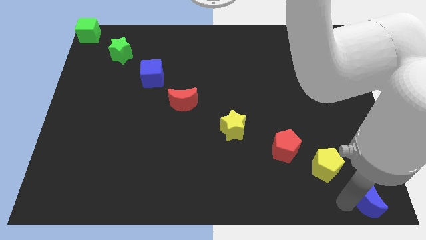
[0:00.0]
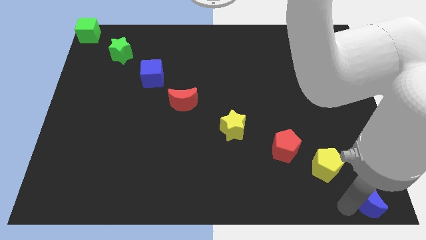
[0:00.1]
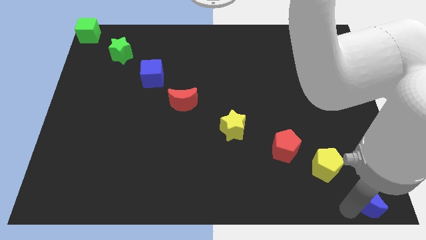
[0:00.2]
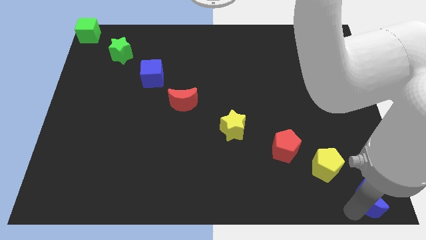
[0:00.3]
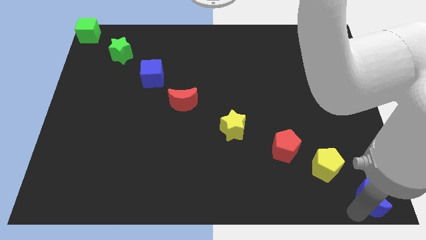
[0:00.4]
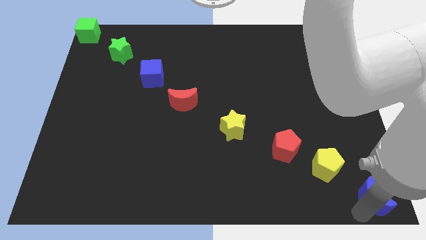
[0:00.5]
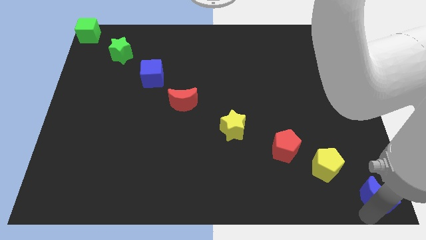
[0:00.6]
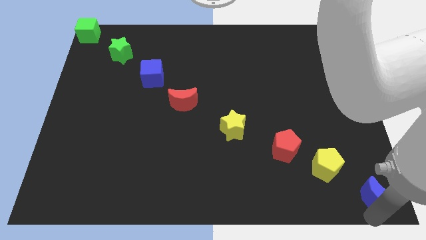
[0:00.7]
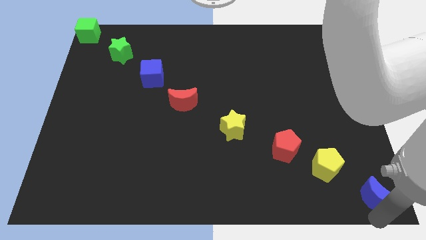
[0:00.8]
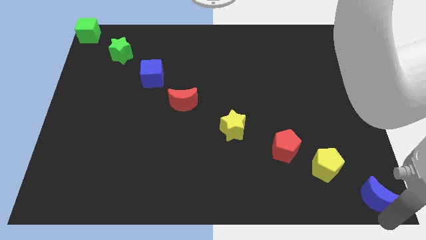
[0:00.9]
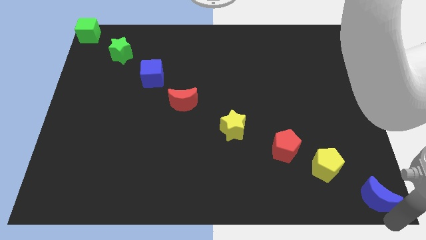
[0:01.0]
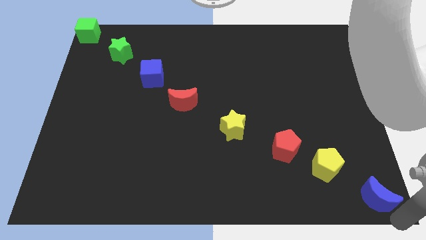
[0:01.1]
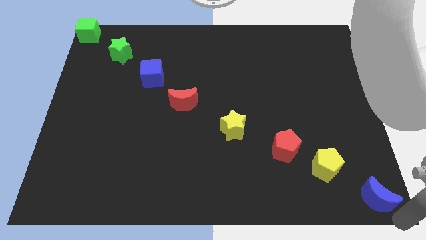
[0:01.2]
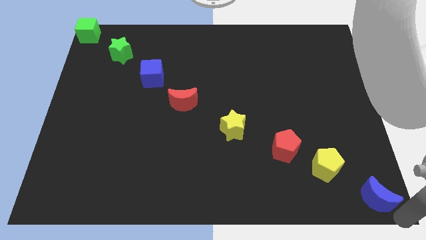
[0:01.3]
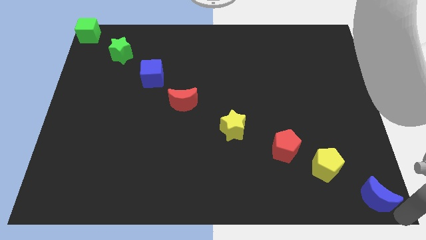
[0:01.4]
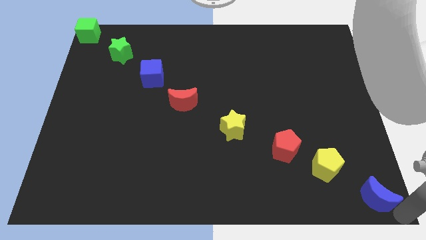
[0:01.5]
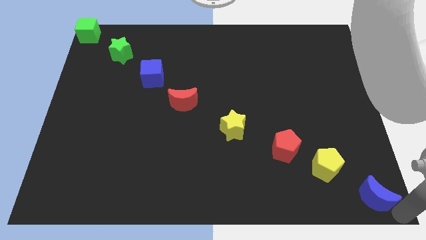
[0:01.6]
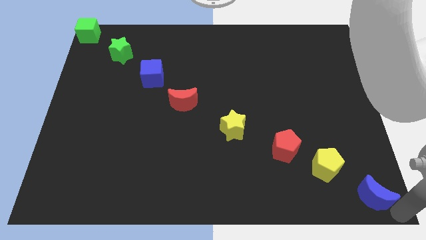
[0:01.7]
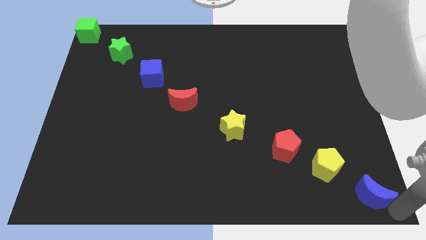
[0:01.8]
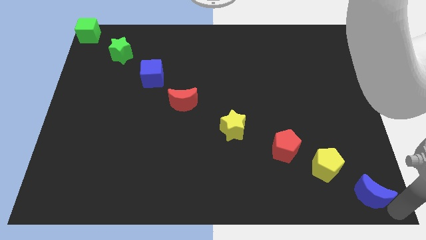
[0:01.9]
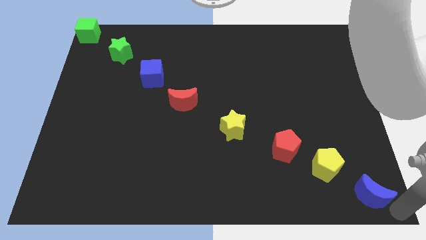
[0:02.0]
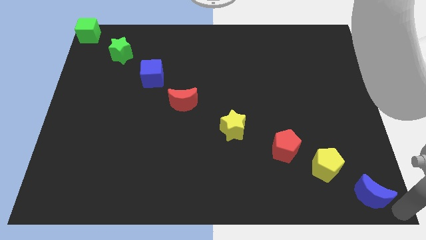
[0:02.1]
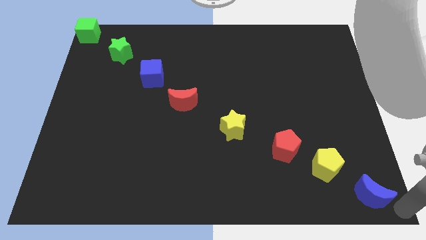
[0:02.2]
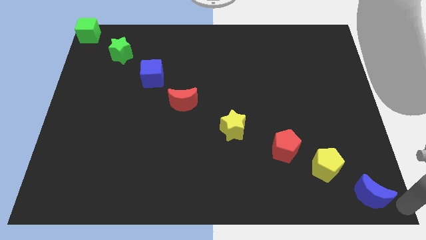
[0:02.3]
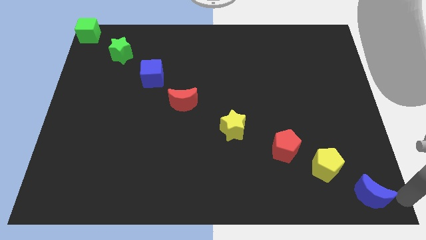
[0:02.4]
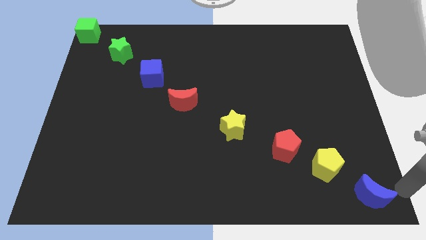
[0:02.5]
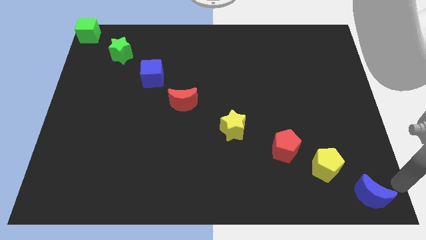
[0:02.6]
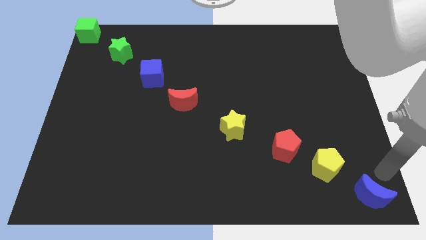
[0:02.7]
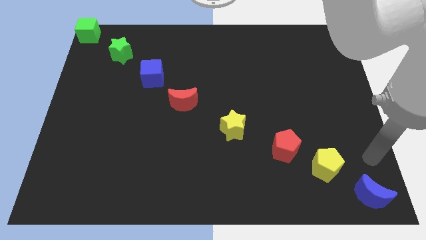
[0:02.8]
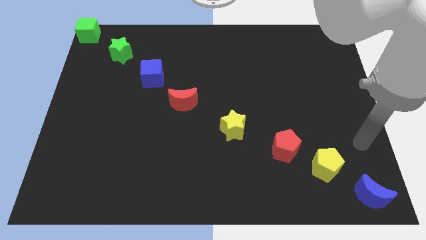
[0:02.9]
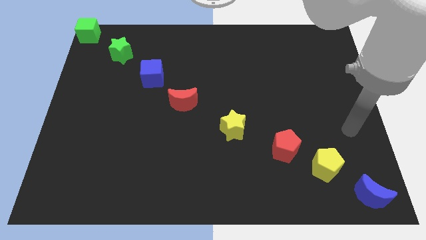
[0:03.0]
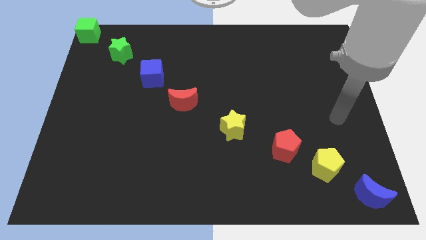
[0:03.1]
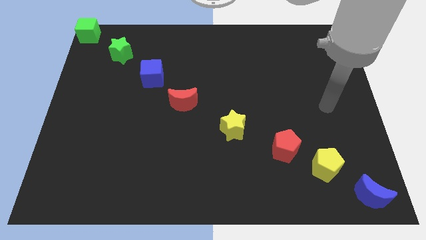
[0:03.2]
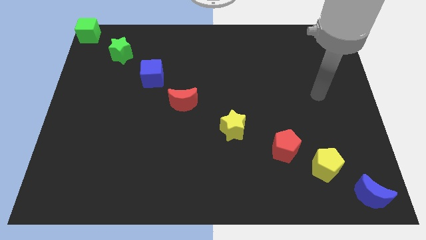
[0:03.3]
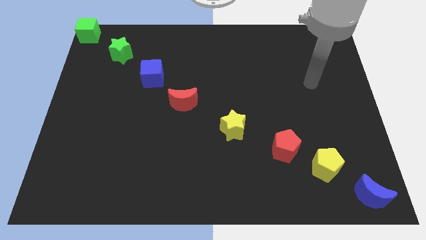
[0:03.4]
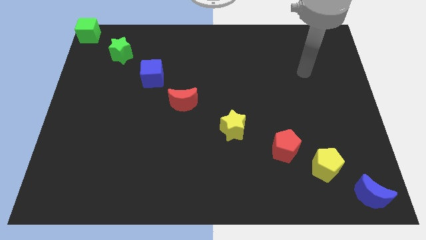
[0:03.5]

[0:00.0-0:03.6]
move blue moon slightly to the right bottom

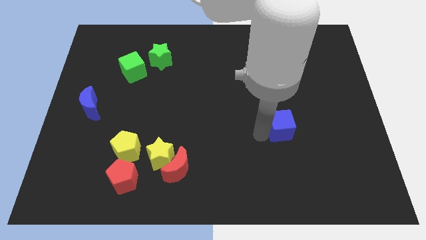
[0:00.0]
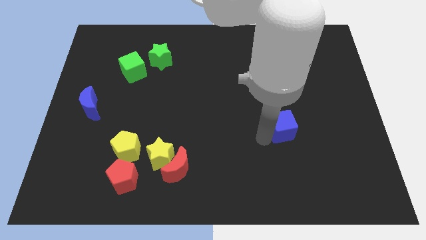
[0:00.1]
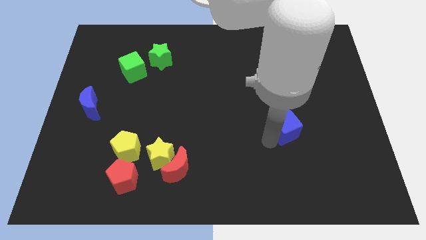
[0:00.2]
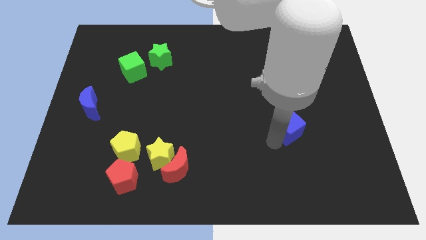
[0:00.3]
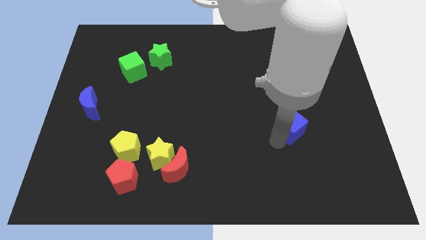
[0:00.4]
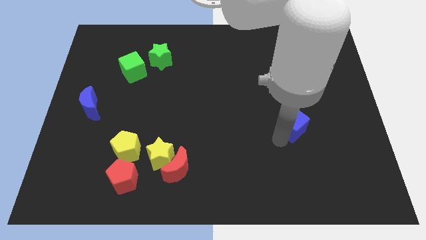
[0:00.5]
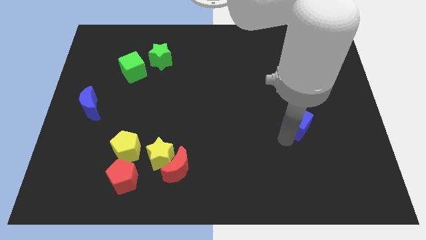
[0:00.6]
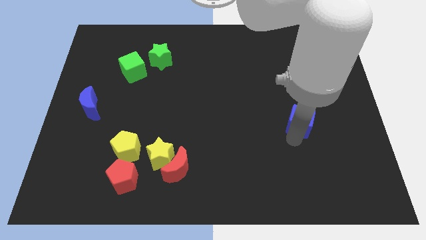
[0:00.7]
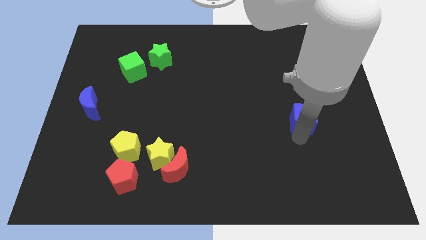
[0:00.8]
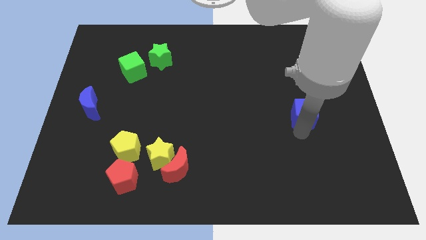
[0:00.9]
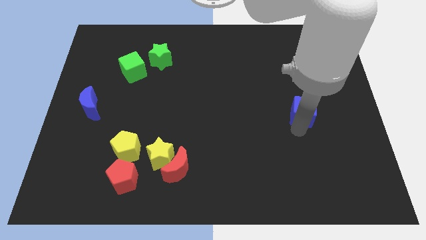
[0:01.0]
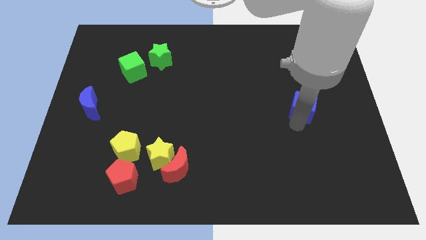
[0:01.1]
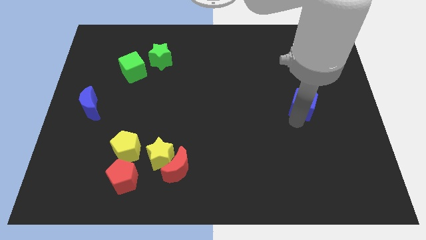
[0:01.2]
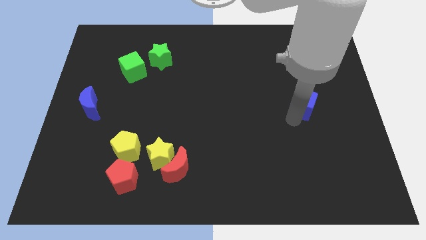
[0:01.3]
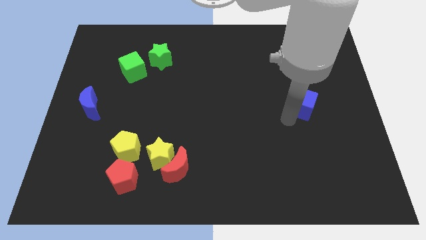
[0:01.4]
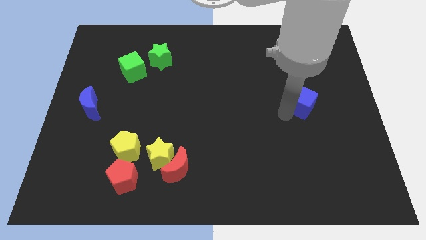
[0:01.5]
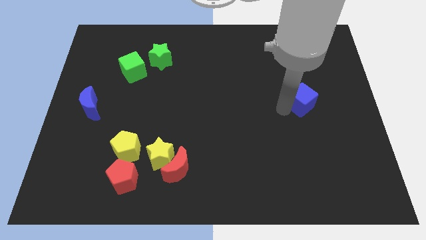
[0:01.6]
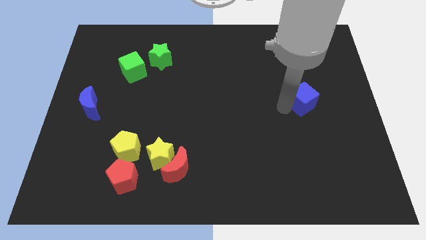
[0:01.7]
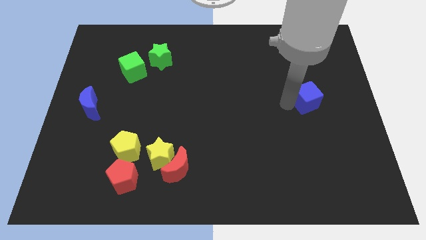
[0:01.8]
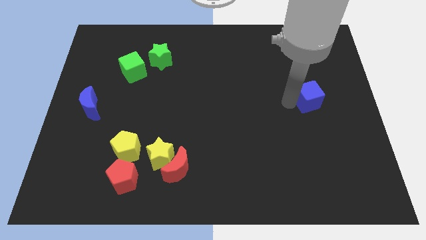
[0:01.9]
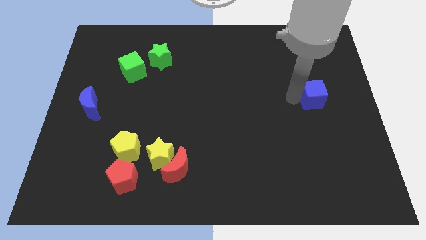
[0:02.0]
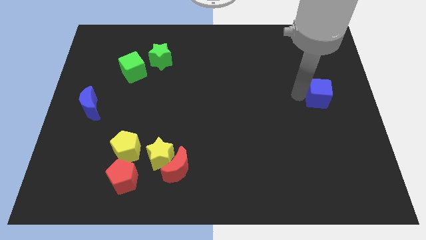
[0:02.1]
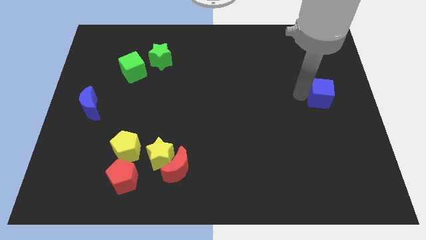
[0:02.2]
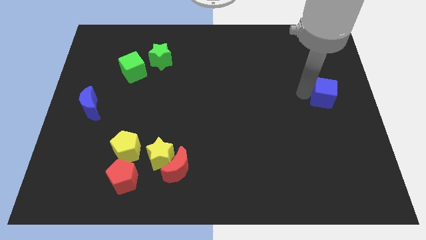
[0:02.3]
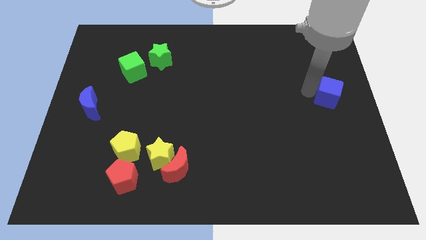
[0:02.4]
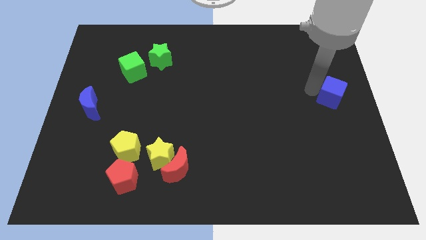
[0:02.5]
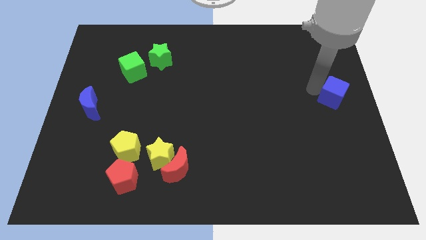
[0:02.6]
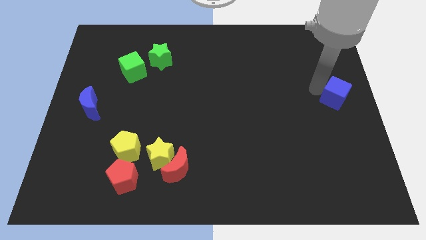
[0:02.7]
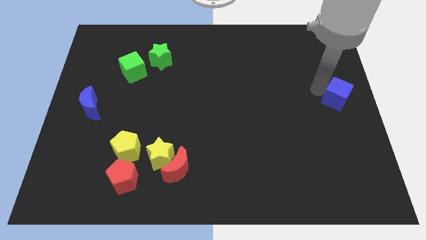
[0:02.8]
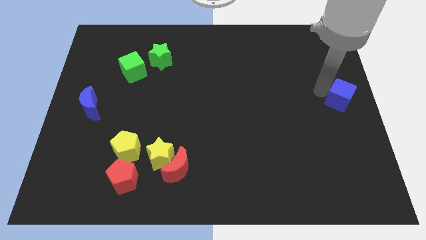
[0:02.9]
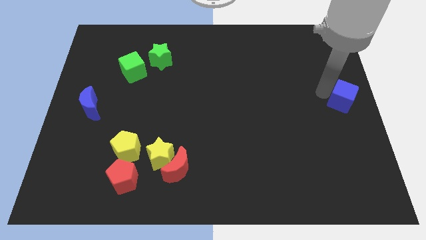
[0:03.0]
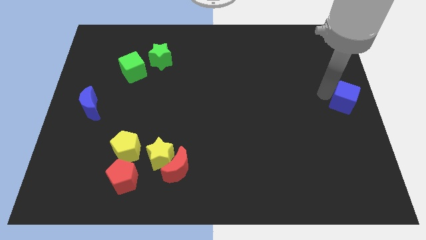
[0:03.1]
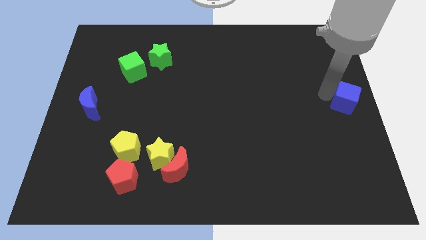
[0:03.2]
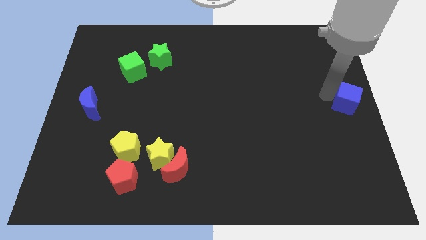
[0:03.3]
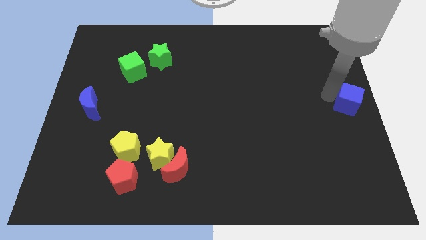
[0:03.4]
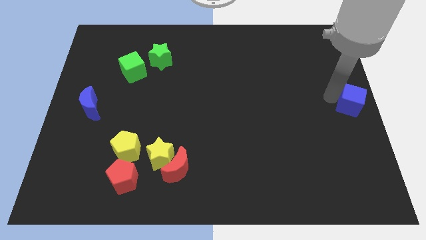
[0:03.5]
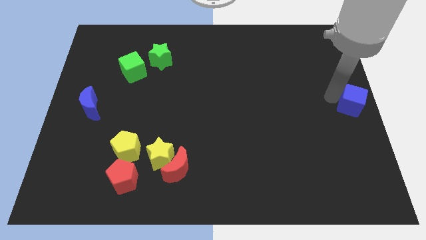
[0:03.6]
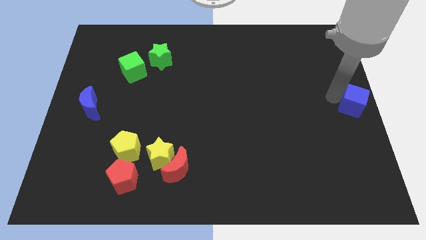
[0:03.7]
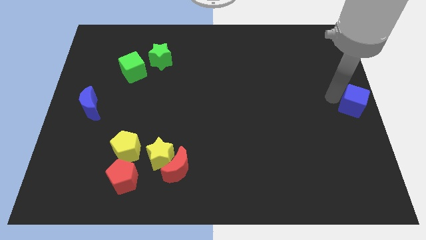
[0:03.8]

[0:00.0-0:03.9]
place the blue cube parallel to blue moon

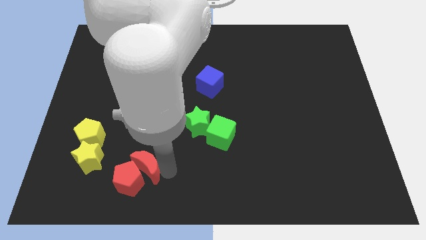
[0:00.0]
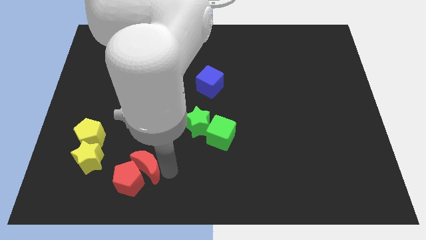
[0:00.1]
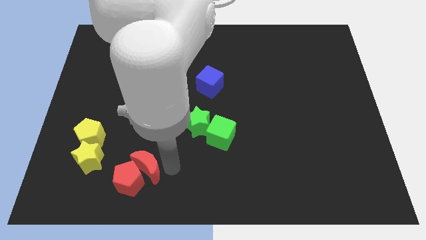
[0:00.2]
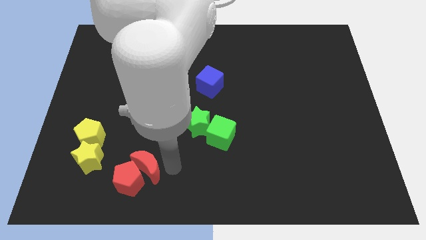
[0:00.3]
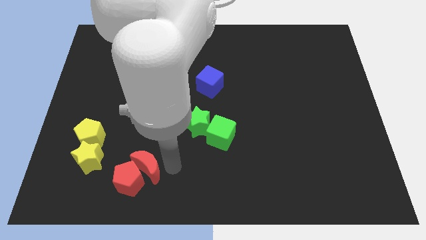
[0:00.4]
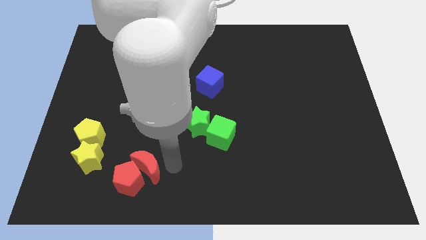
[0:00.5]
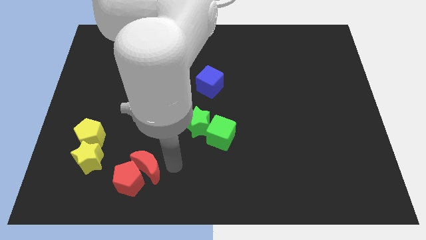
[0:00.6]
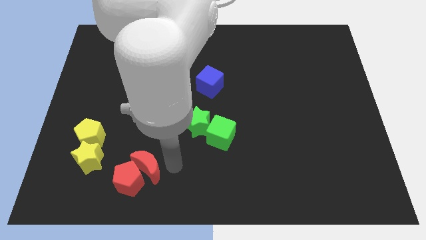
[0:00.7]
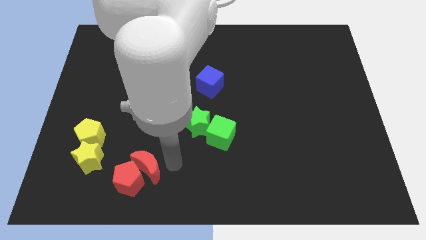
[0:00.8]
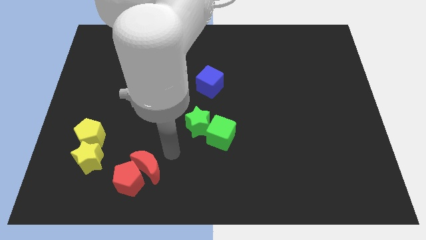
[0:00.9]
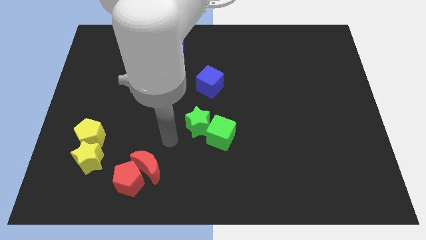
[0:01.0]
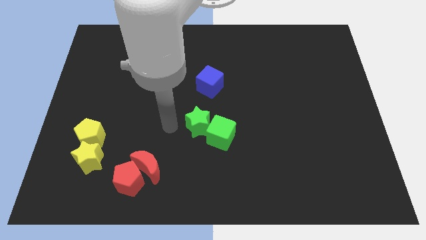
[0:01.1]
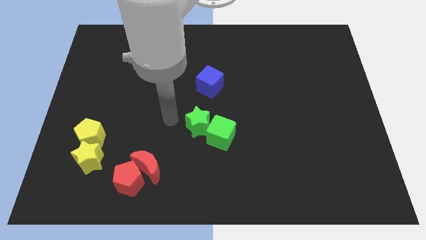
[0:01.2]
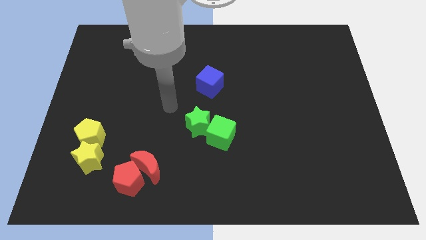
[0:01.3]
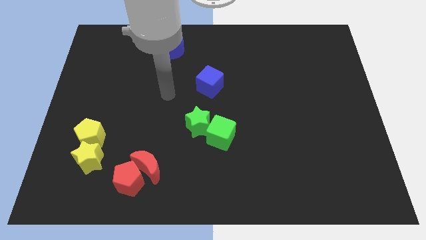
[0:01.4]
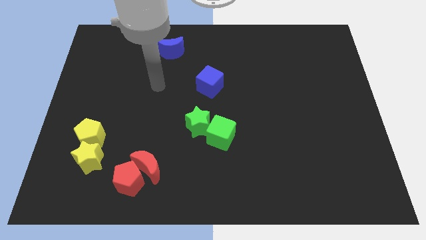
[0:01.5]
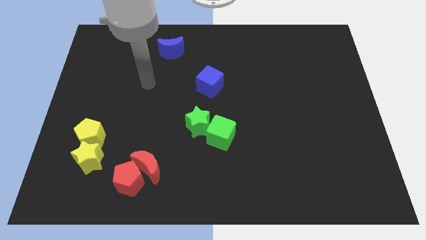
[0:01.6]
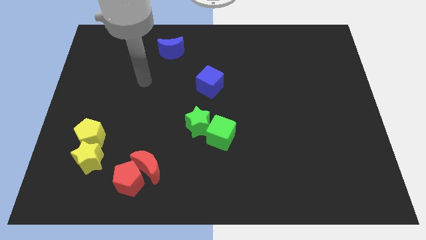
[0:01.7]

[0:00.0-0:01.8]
move your hand away from the red moon
